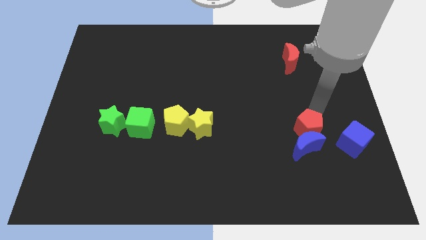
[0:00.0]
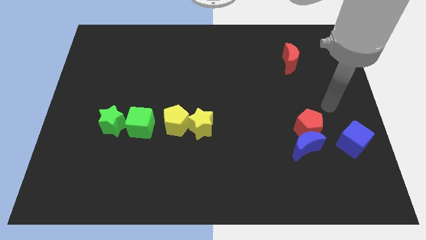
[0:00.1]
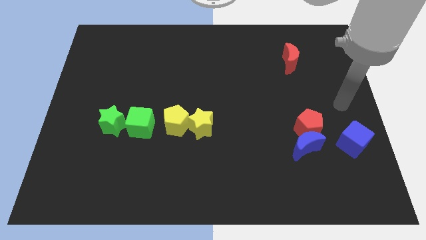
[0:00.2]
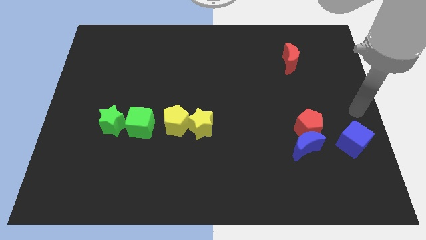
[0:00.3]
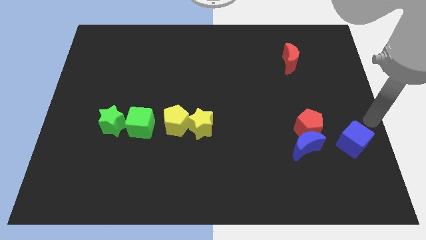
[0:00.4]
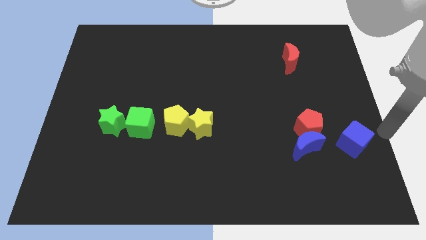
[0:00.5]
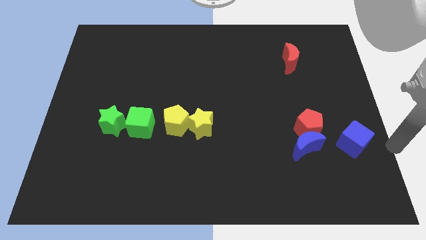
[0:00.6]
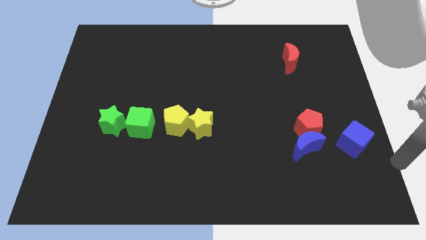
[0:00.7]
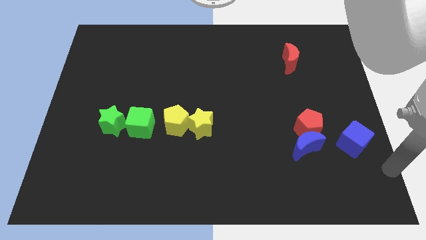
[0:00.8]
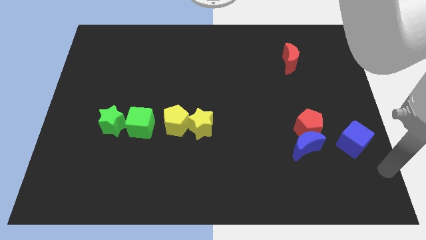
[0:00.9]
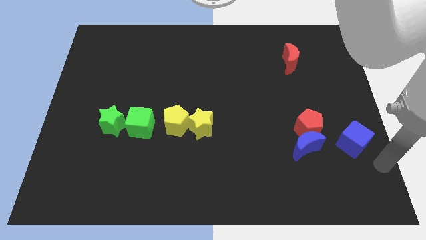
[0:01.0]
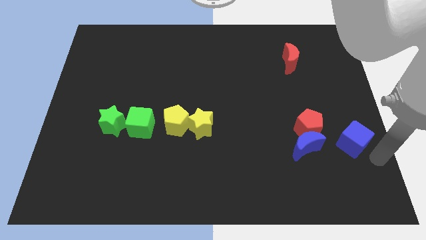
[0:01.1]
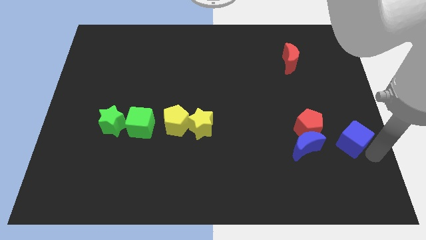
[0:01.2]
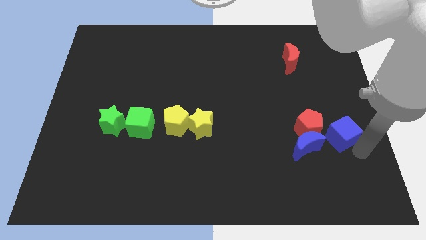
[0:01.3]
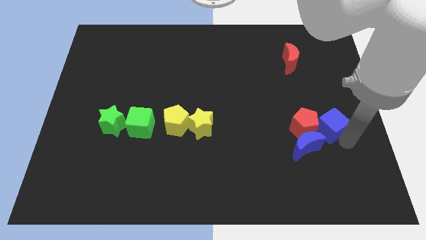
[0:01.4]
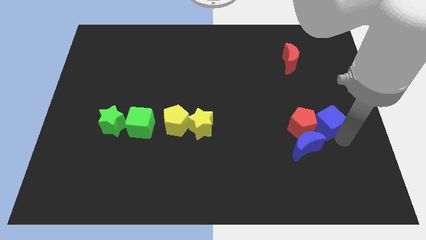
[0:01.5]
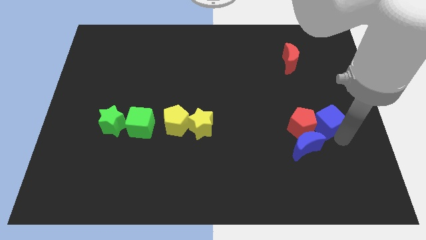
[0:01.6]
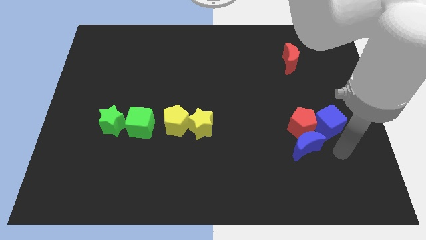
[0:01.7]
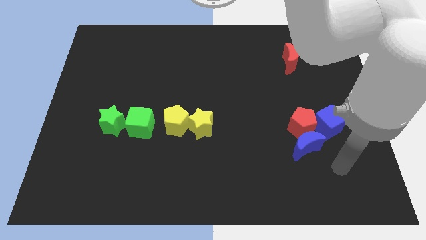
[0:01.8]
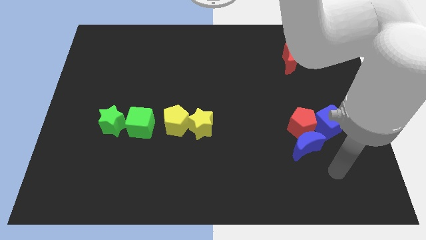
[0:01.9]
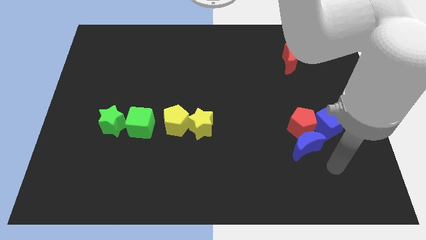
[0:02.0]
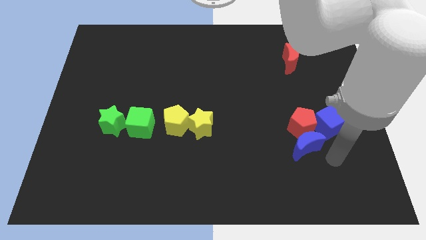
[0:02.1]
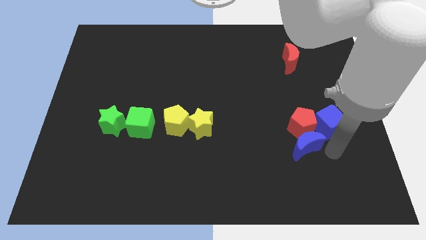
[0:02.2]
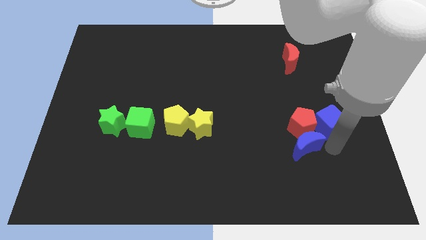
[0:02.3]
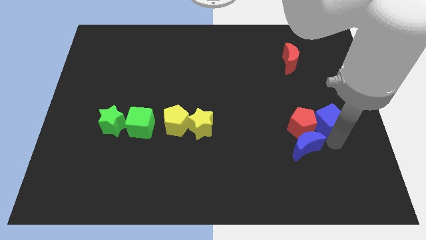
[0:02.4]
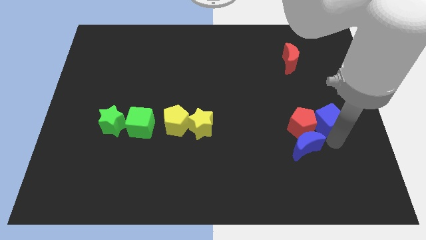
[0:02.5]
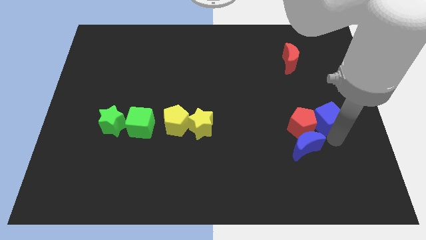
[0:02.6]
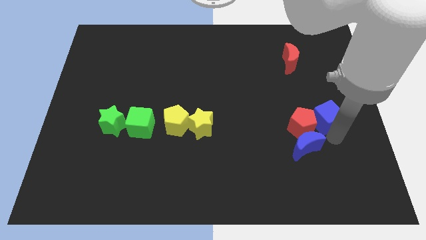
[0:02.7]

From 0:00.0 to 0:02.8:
place the blue cube to right of red pentagon

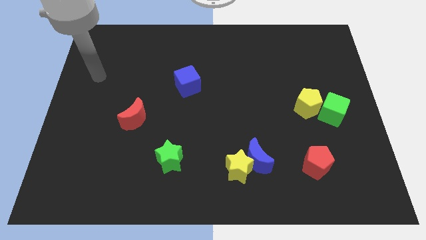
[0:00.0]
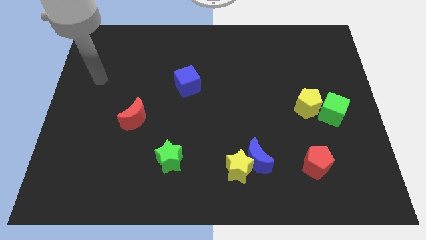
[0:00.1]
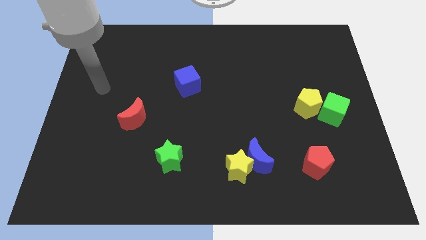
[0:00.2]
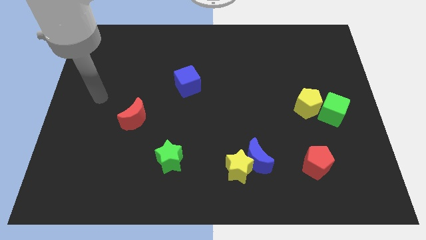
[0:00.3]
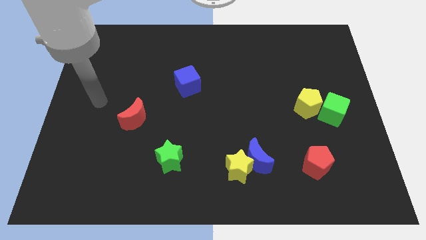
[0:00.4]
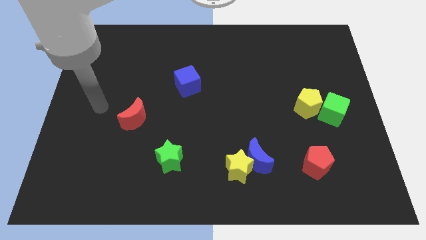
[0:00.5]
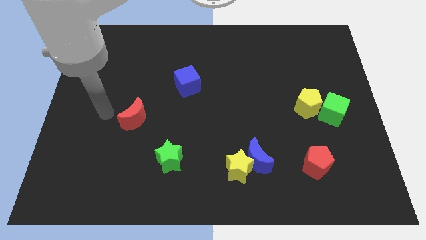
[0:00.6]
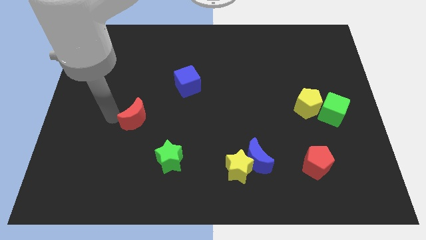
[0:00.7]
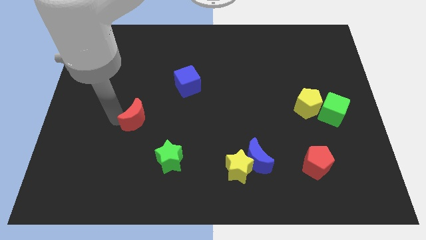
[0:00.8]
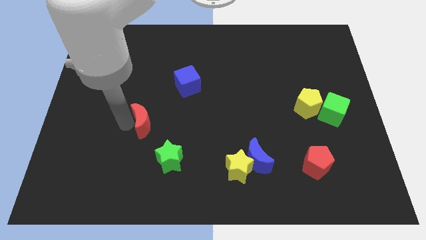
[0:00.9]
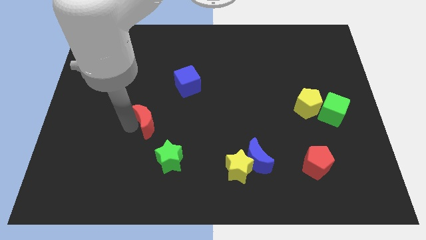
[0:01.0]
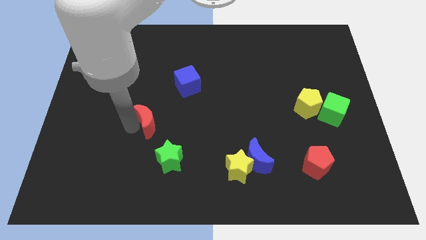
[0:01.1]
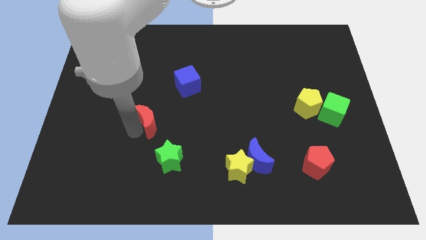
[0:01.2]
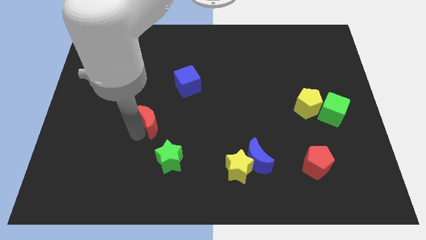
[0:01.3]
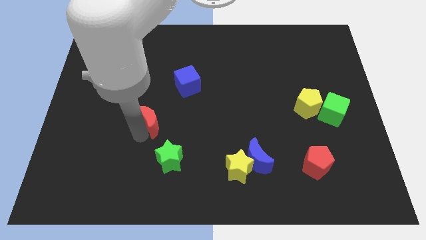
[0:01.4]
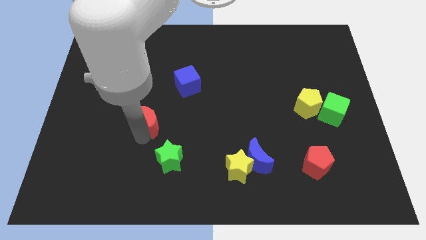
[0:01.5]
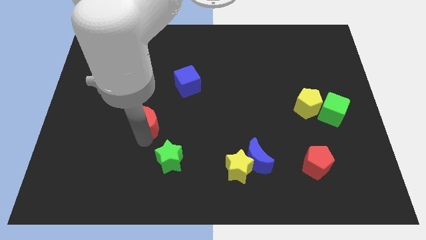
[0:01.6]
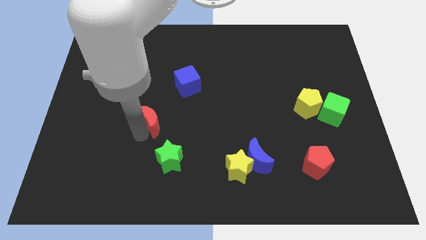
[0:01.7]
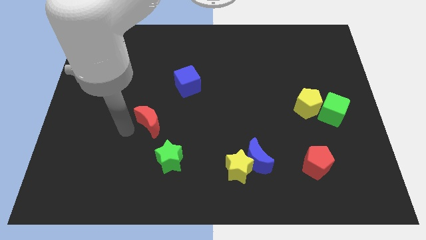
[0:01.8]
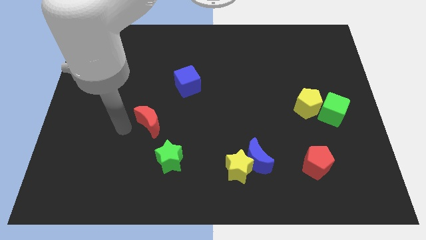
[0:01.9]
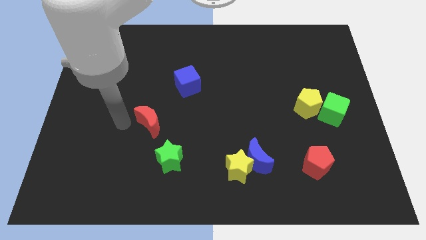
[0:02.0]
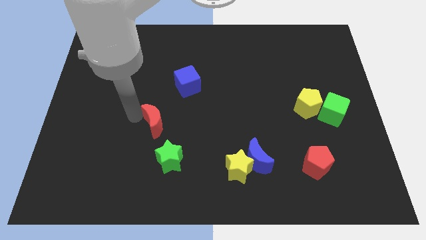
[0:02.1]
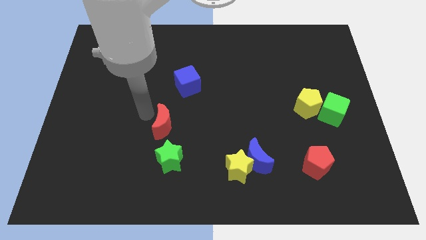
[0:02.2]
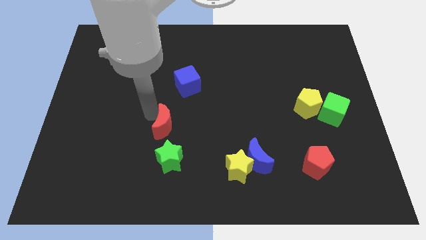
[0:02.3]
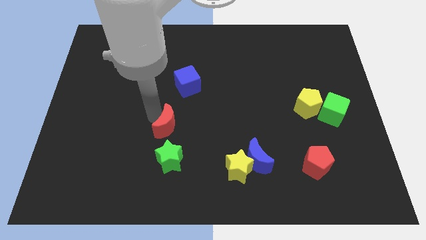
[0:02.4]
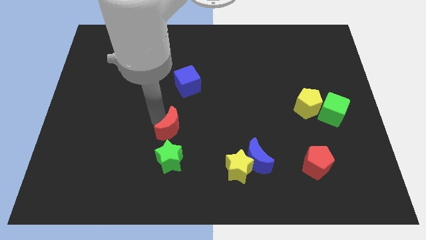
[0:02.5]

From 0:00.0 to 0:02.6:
move the red moon above the green star

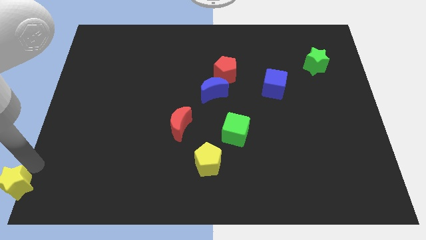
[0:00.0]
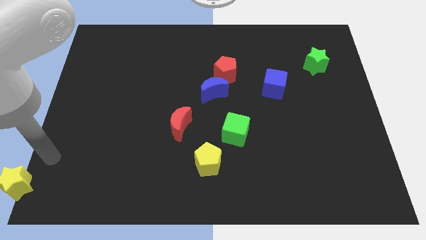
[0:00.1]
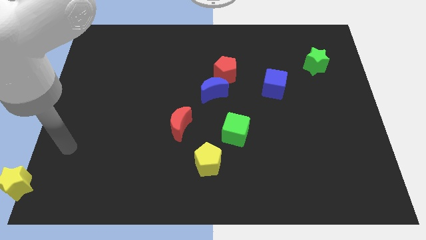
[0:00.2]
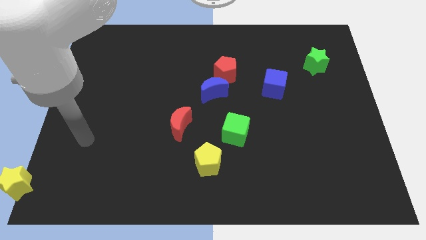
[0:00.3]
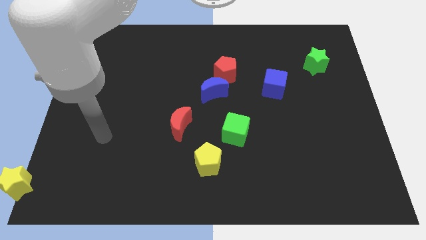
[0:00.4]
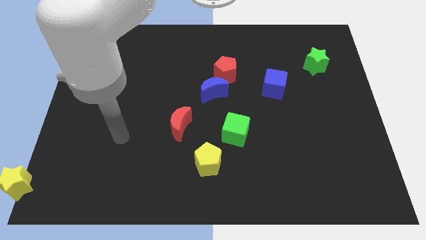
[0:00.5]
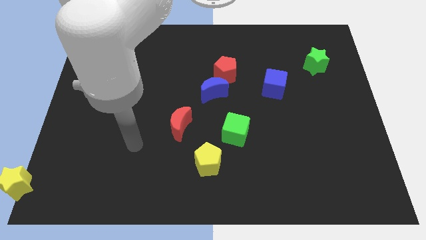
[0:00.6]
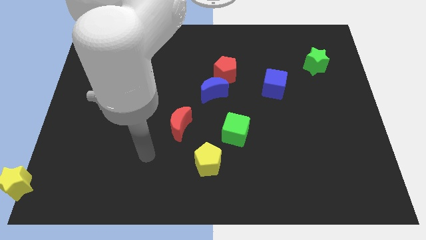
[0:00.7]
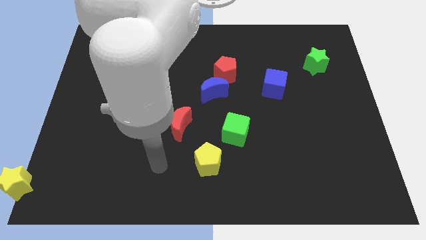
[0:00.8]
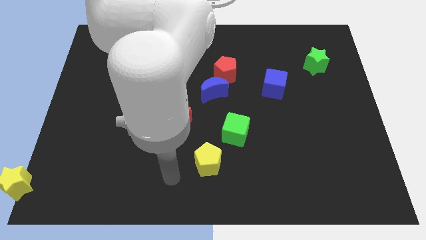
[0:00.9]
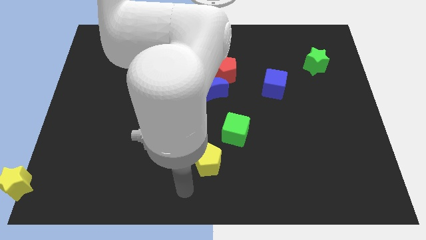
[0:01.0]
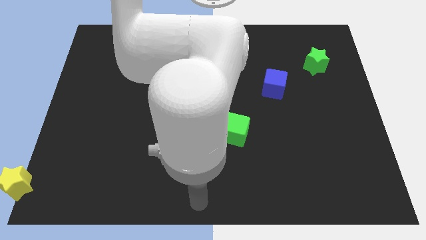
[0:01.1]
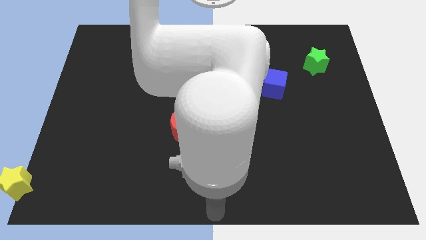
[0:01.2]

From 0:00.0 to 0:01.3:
point your arm at the bottom center of the board

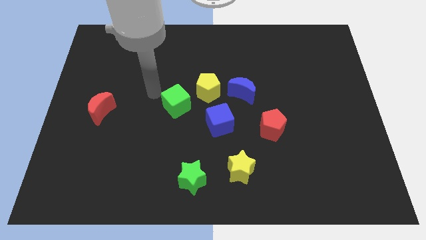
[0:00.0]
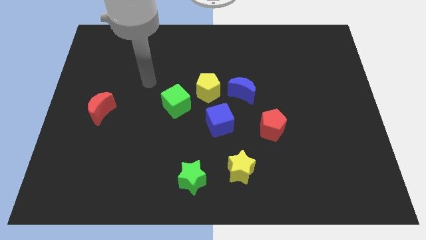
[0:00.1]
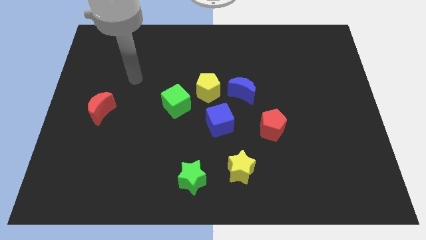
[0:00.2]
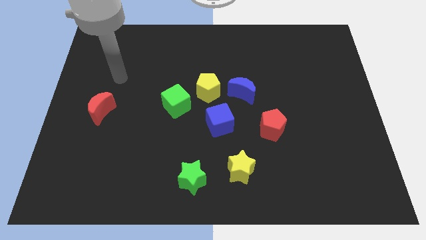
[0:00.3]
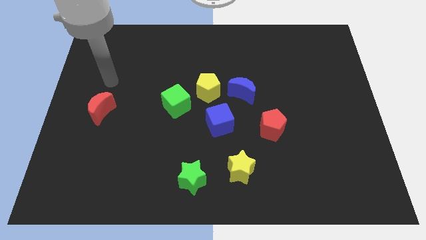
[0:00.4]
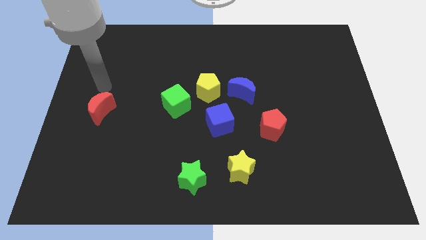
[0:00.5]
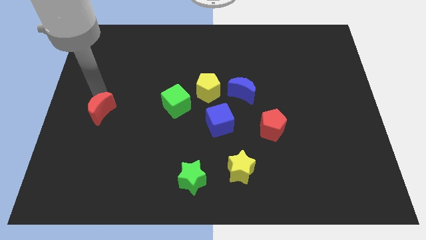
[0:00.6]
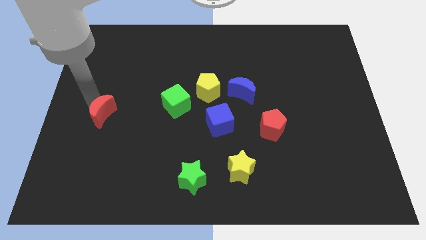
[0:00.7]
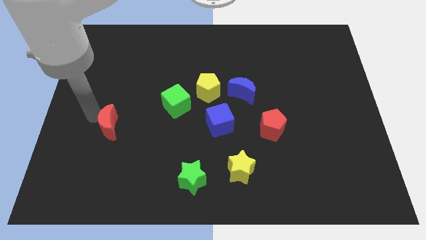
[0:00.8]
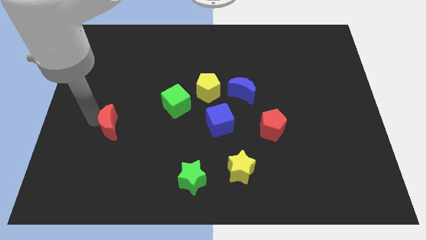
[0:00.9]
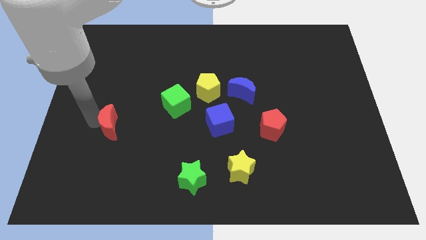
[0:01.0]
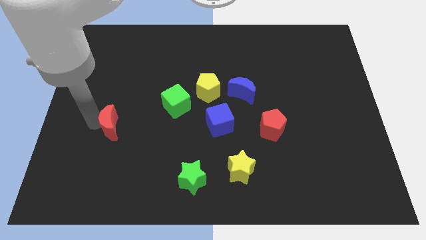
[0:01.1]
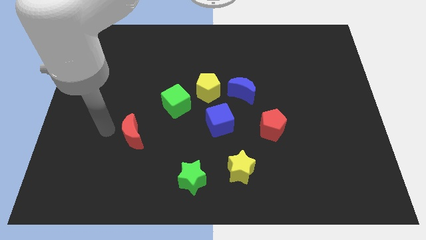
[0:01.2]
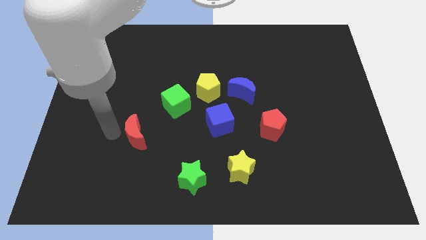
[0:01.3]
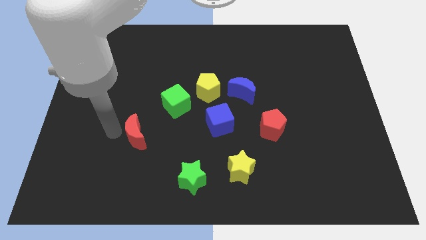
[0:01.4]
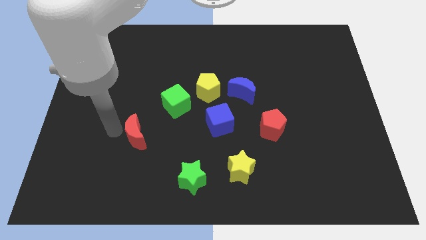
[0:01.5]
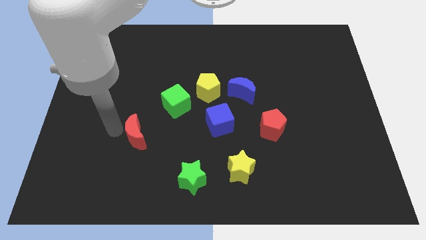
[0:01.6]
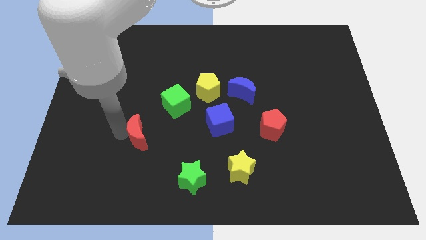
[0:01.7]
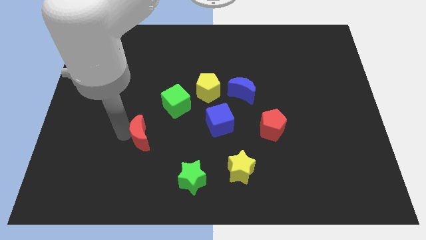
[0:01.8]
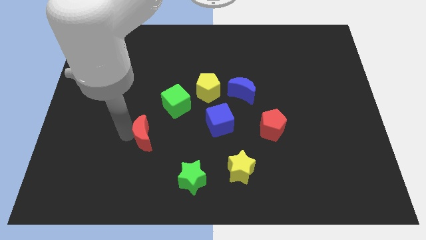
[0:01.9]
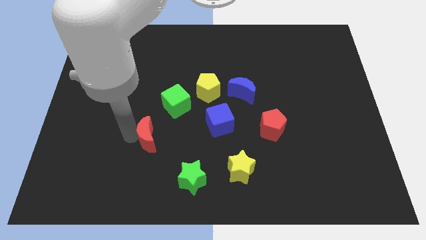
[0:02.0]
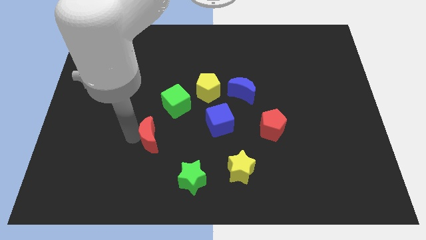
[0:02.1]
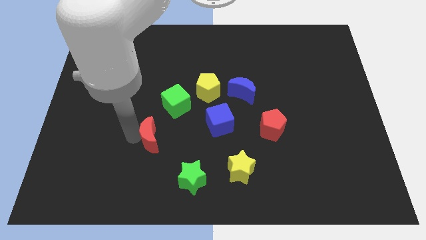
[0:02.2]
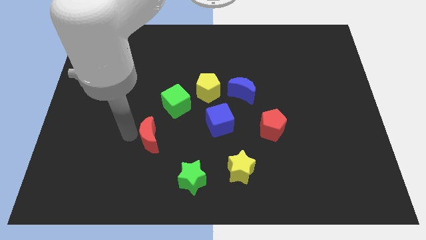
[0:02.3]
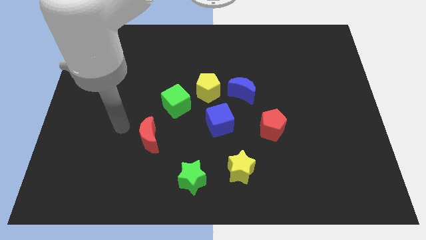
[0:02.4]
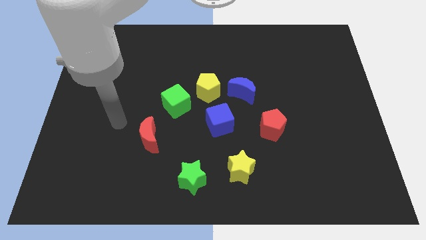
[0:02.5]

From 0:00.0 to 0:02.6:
push the red crescent towards the center of the board
